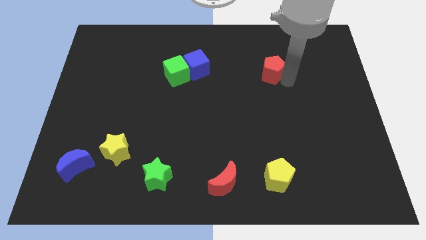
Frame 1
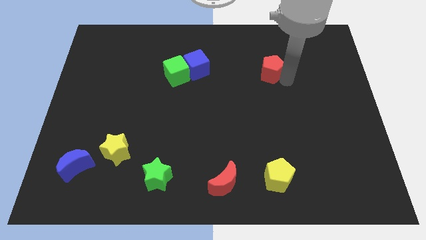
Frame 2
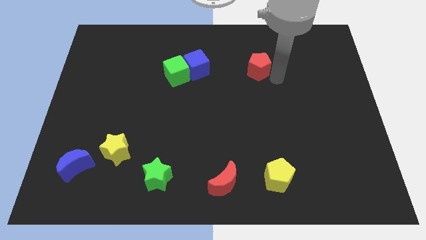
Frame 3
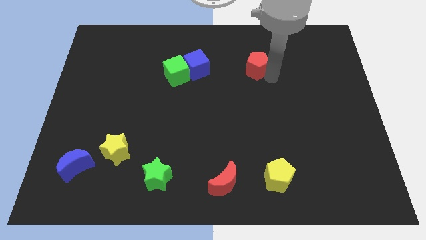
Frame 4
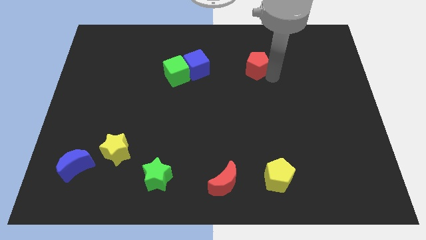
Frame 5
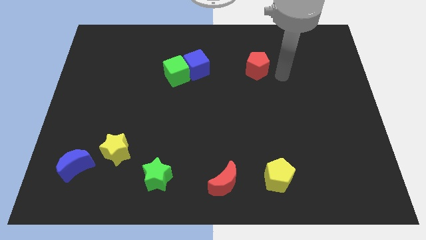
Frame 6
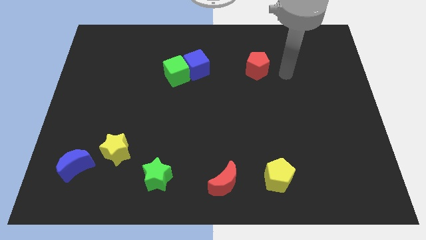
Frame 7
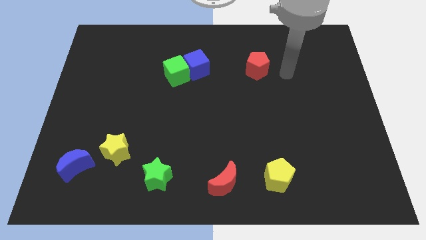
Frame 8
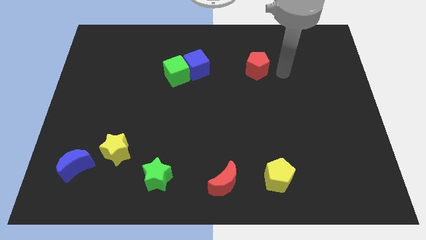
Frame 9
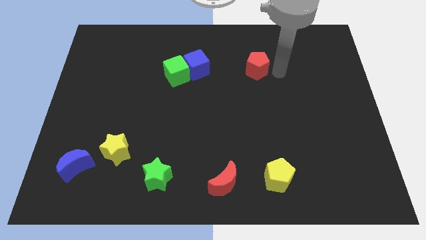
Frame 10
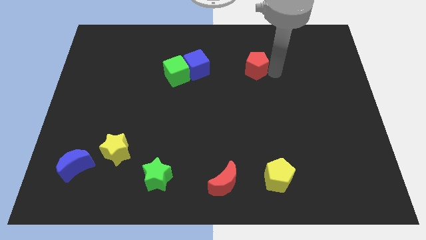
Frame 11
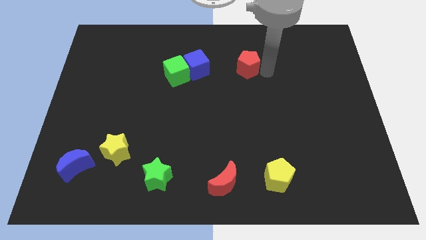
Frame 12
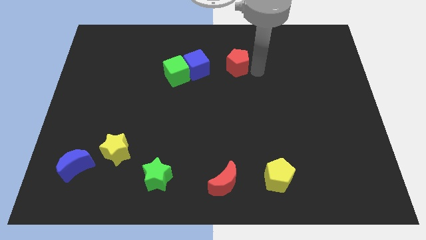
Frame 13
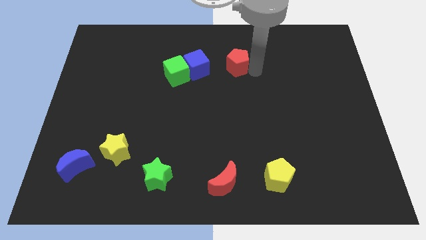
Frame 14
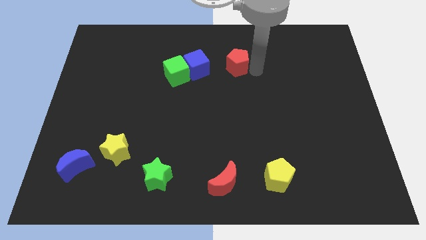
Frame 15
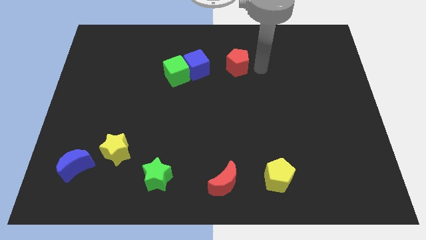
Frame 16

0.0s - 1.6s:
slide the red pentagon diagonally top left to the yellow pentagon

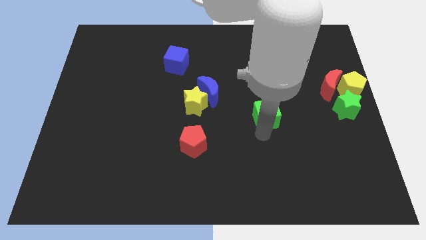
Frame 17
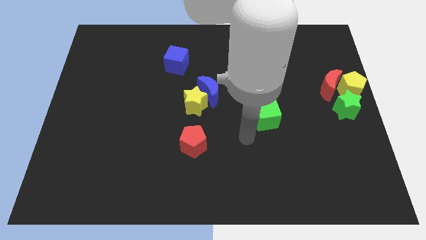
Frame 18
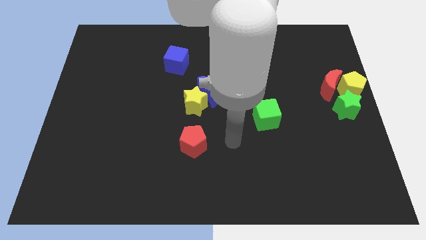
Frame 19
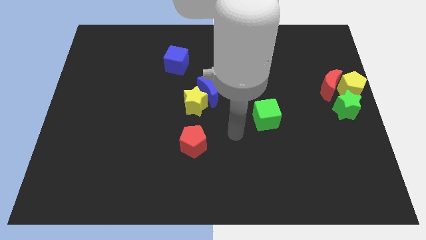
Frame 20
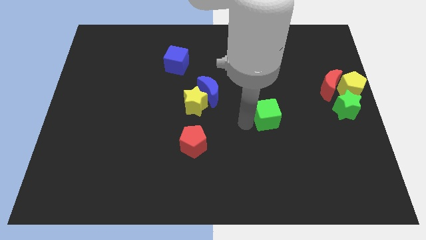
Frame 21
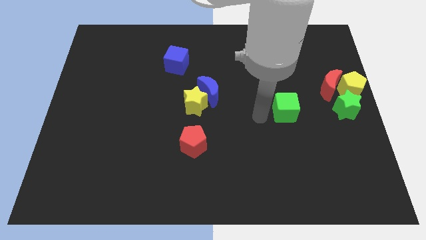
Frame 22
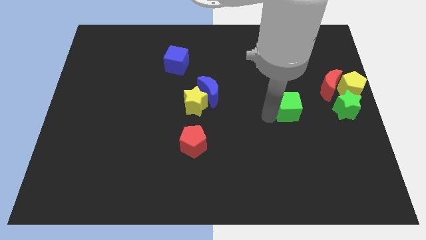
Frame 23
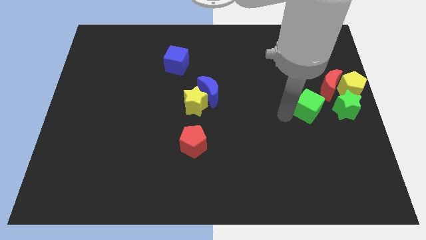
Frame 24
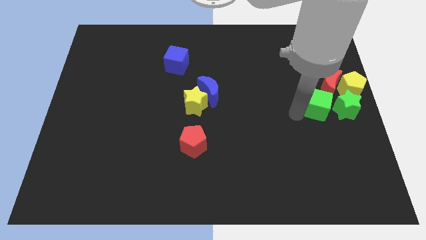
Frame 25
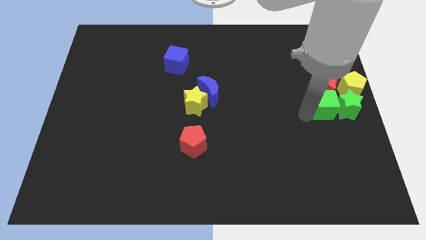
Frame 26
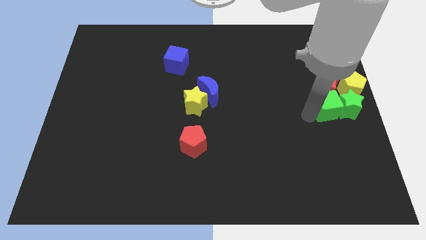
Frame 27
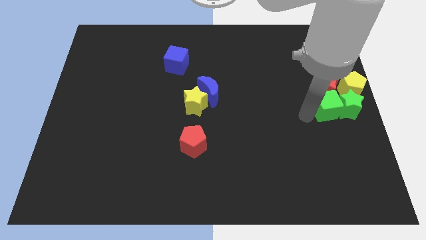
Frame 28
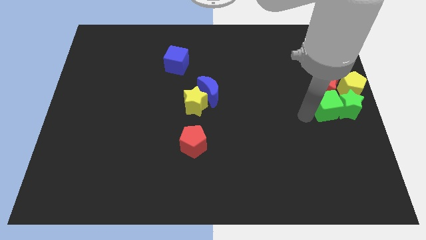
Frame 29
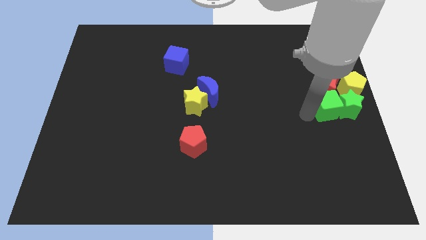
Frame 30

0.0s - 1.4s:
push the green cube into the green star

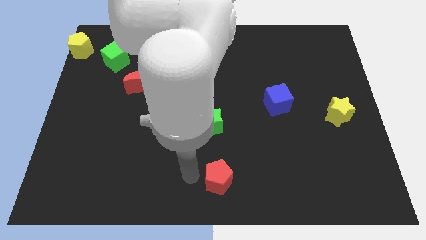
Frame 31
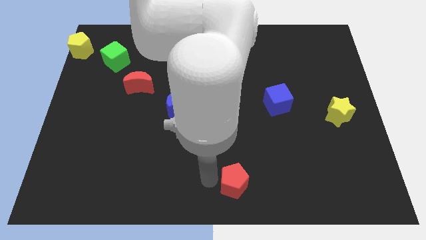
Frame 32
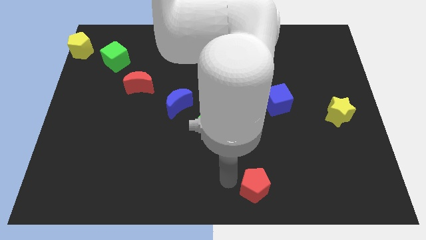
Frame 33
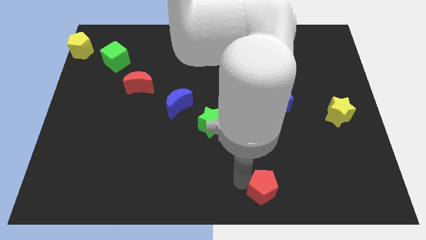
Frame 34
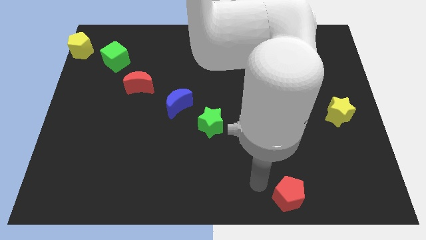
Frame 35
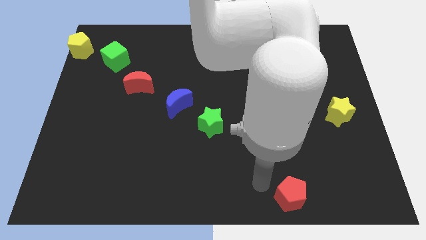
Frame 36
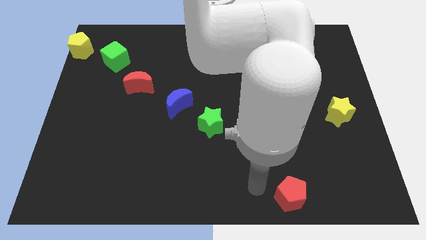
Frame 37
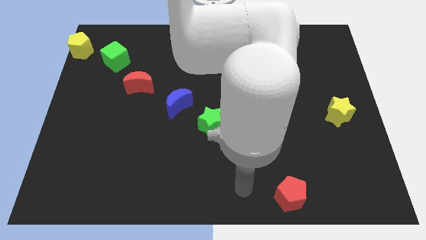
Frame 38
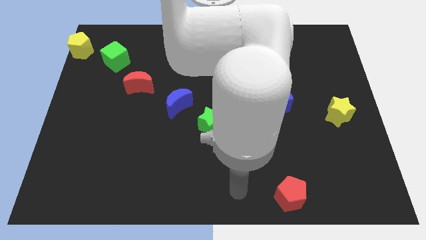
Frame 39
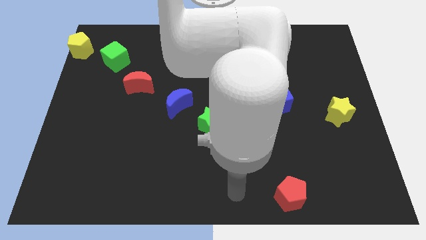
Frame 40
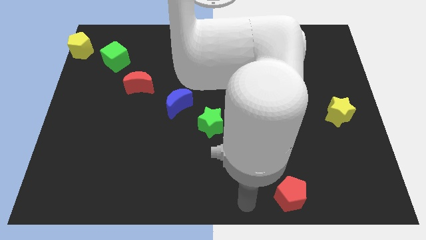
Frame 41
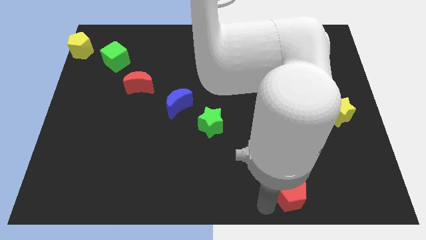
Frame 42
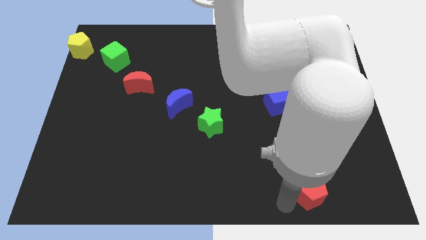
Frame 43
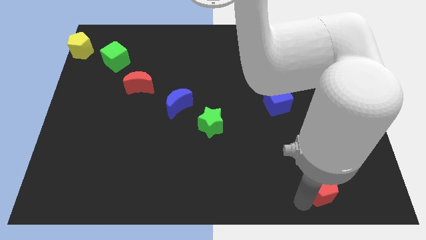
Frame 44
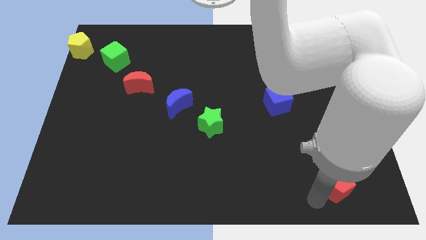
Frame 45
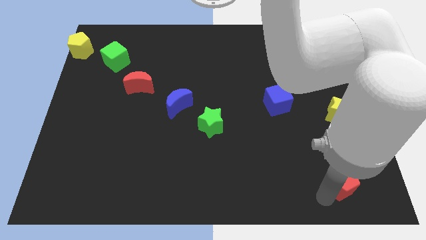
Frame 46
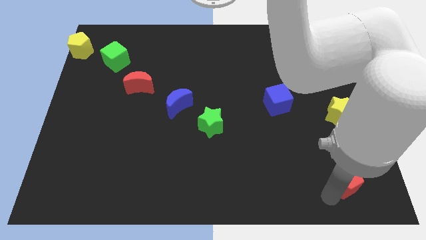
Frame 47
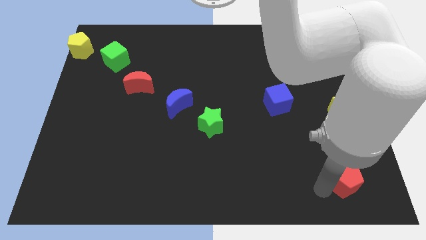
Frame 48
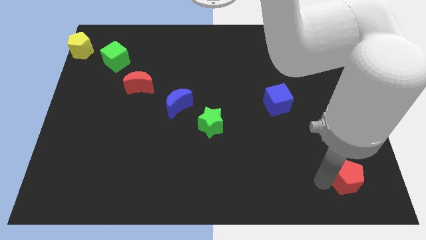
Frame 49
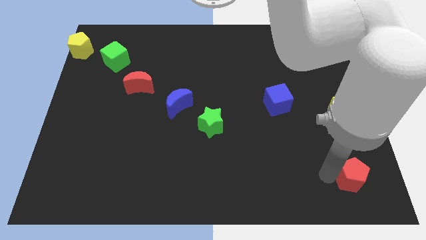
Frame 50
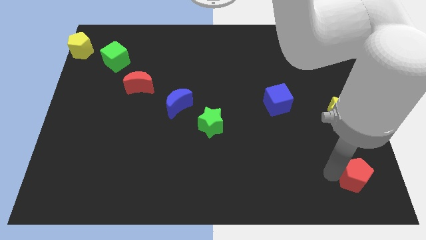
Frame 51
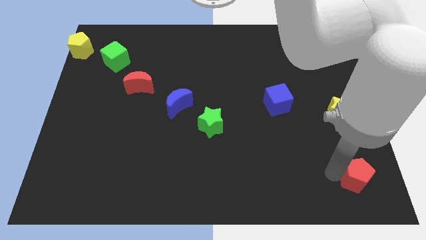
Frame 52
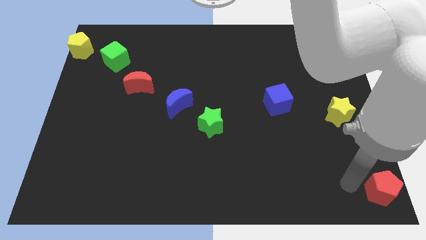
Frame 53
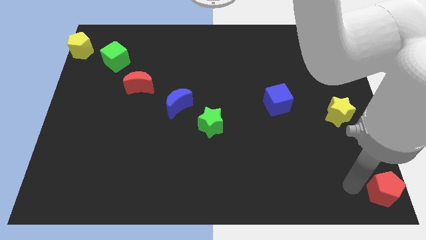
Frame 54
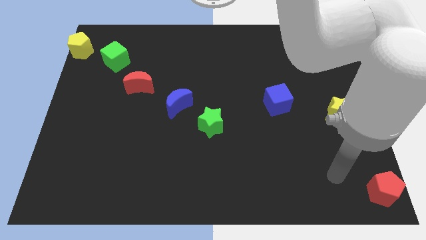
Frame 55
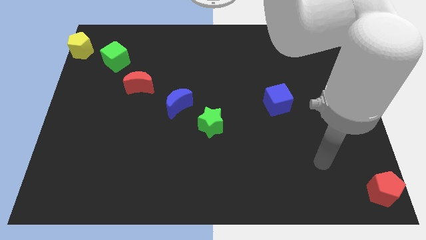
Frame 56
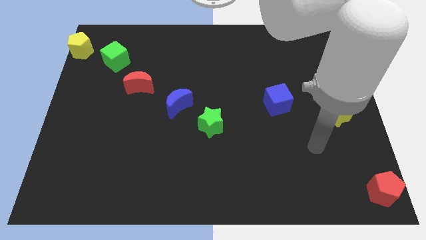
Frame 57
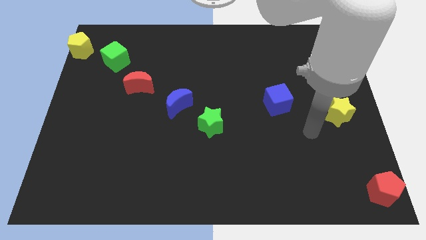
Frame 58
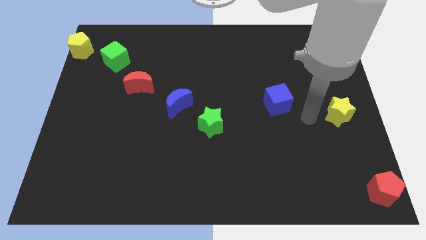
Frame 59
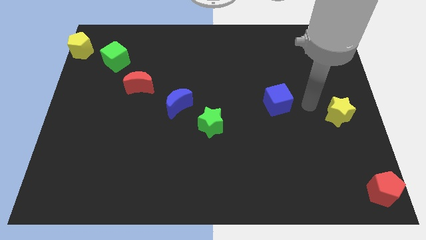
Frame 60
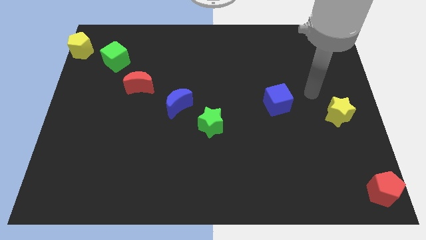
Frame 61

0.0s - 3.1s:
move the red pentagon to bottom right corner to the board

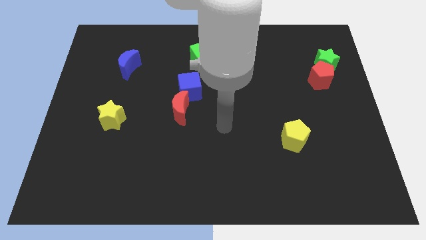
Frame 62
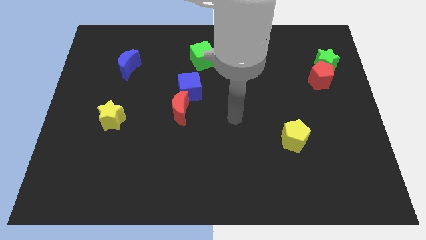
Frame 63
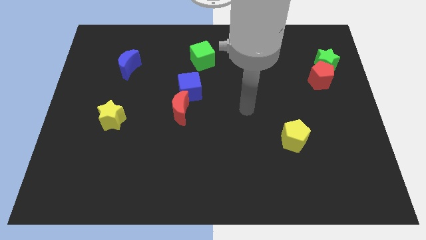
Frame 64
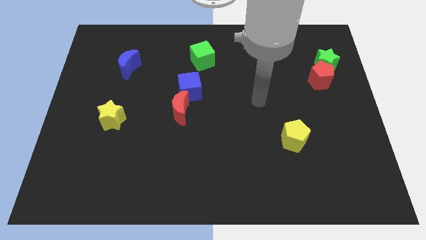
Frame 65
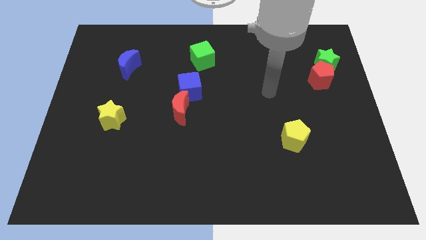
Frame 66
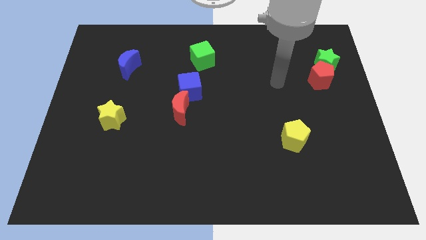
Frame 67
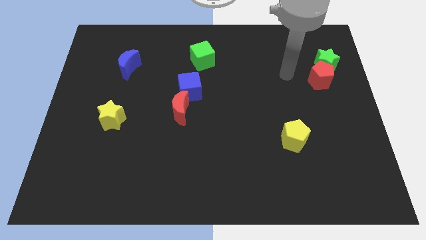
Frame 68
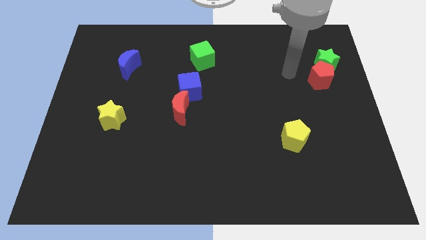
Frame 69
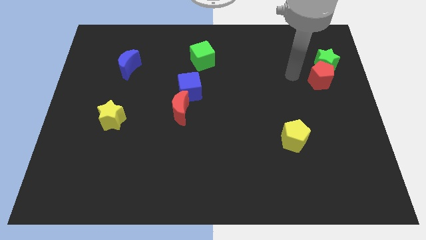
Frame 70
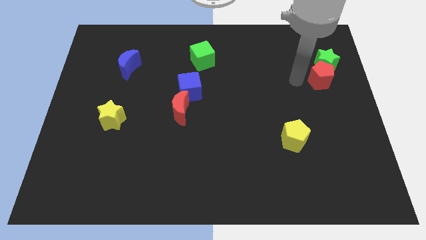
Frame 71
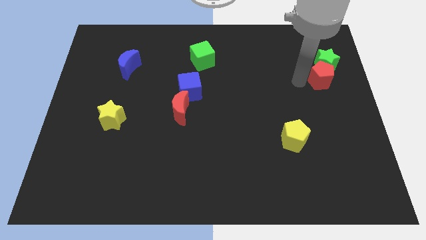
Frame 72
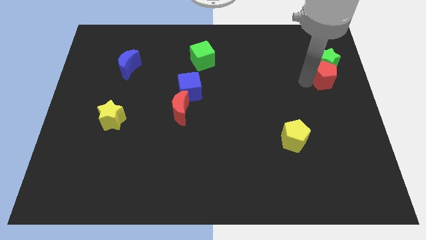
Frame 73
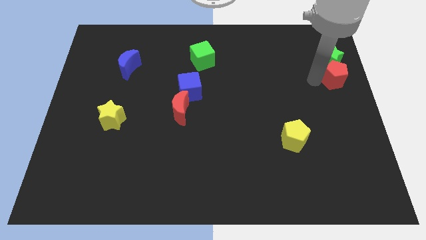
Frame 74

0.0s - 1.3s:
place the arm to the left of the red pentagon

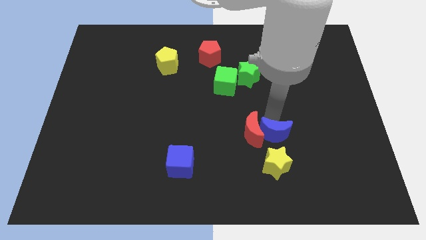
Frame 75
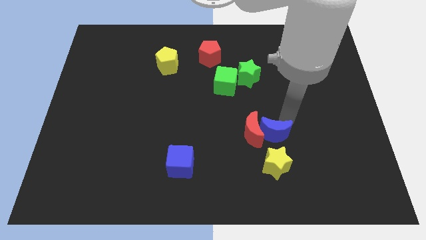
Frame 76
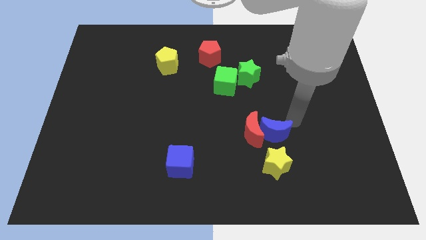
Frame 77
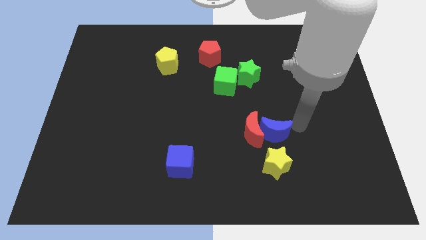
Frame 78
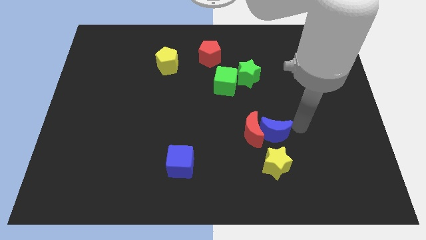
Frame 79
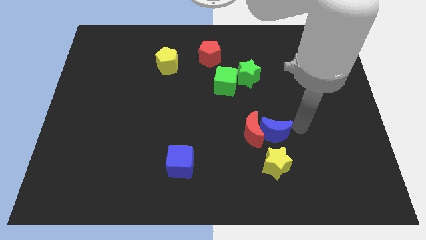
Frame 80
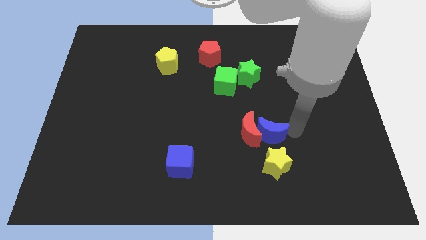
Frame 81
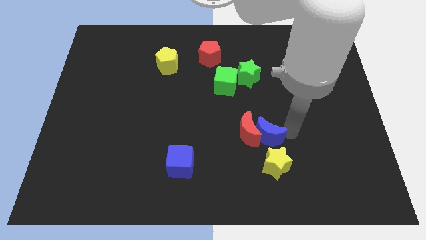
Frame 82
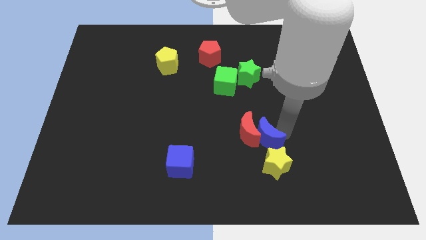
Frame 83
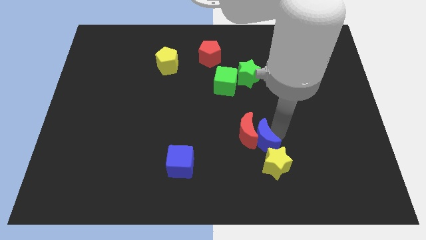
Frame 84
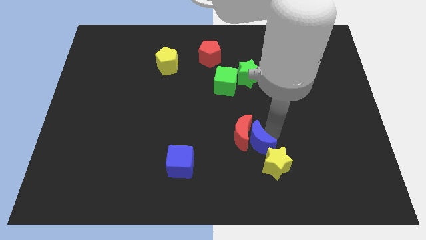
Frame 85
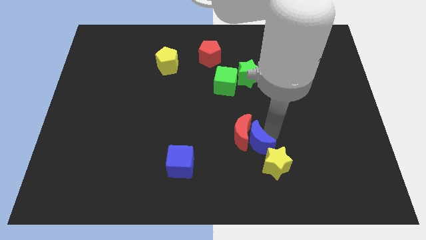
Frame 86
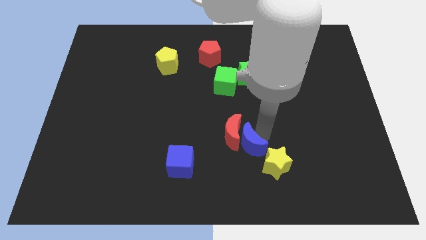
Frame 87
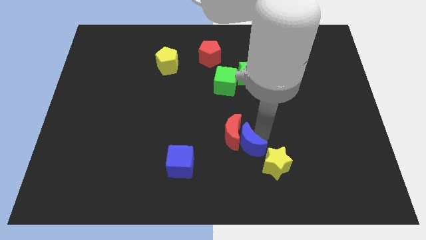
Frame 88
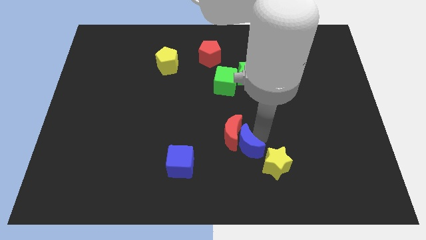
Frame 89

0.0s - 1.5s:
place the blue moon diagonally top left to the yellow star
